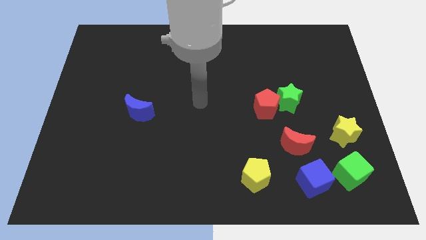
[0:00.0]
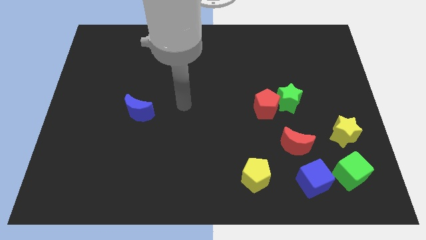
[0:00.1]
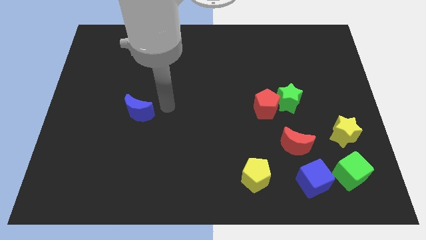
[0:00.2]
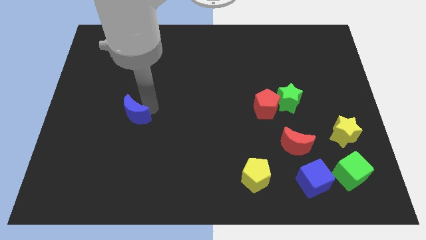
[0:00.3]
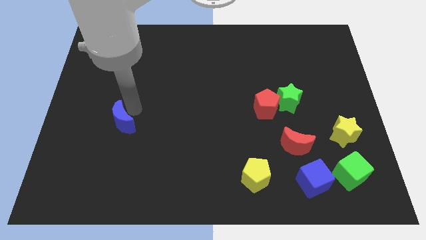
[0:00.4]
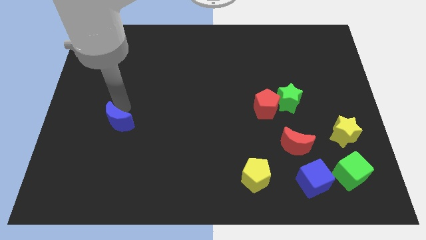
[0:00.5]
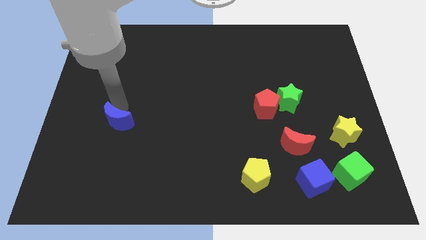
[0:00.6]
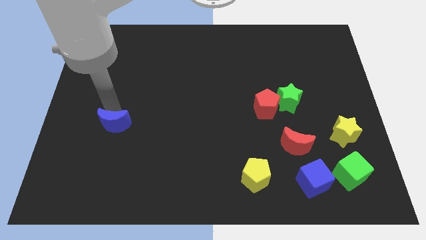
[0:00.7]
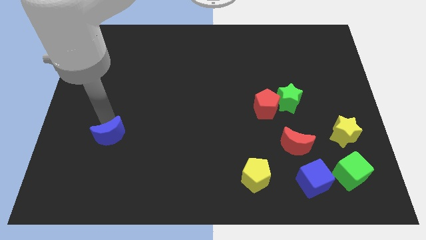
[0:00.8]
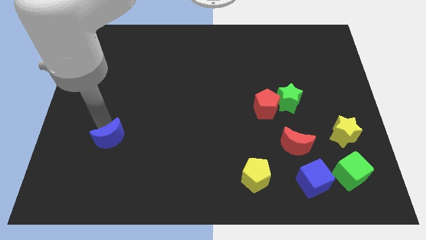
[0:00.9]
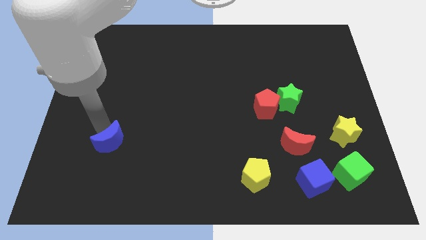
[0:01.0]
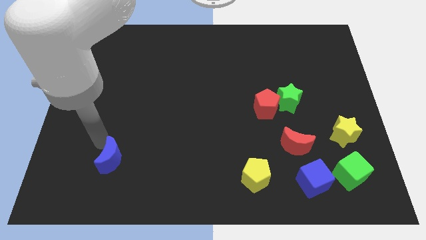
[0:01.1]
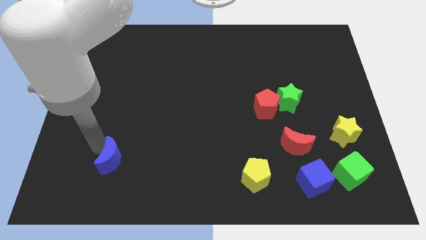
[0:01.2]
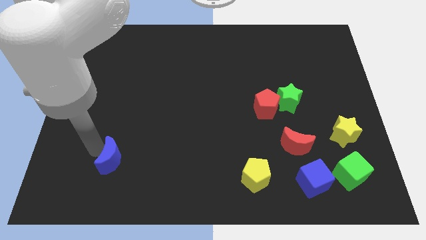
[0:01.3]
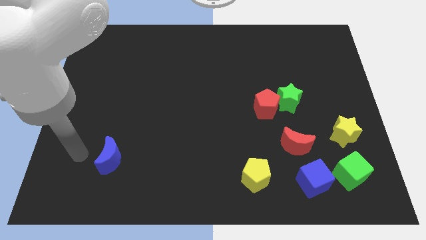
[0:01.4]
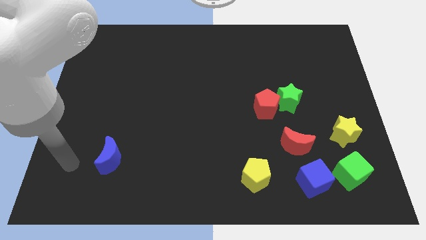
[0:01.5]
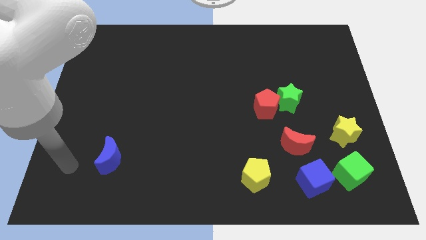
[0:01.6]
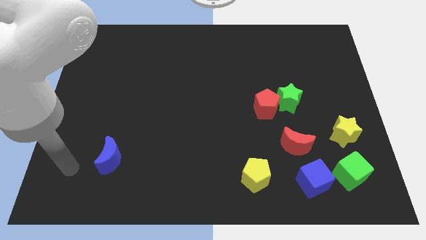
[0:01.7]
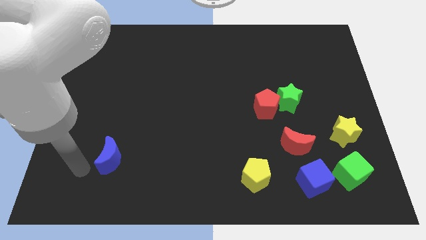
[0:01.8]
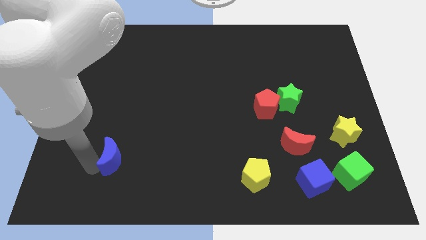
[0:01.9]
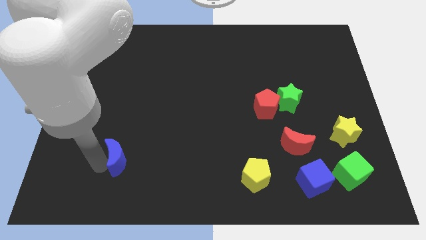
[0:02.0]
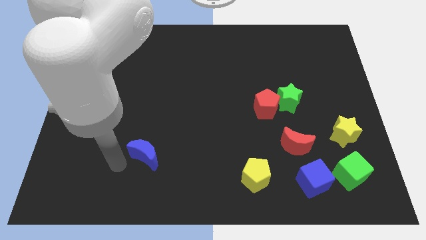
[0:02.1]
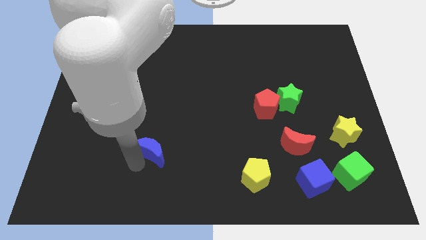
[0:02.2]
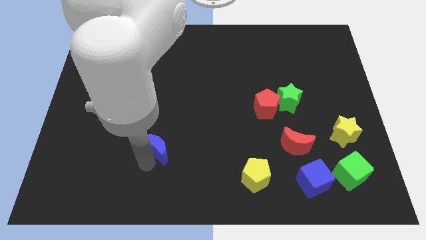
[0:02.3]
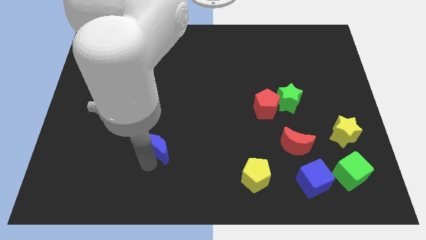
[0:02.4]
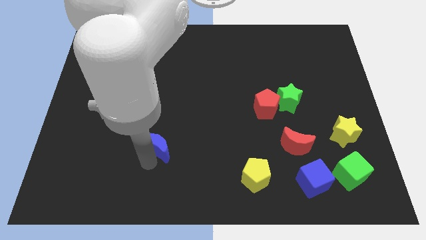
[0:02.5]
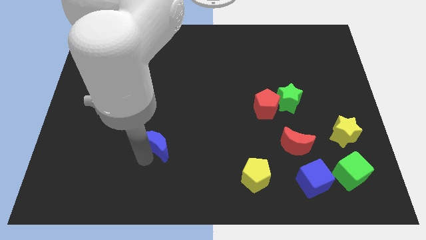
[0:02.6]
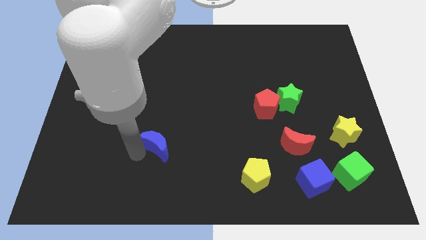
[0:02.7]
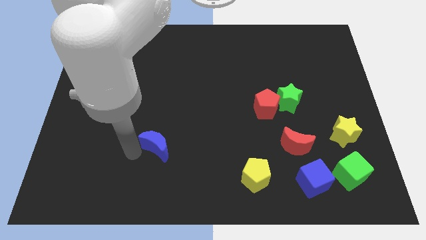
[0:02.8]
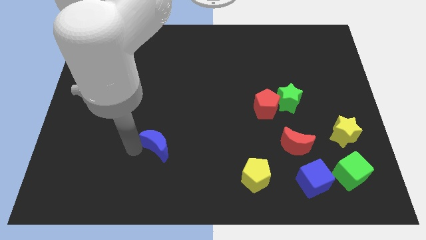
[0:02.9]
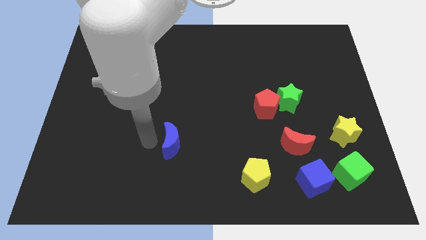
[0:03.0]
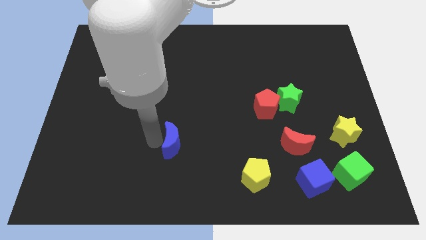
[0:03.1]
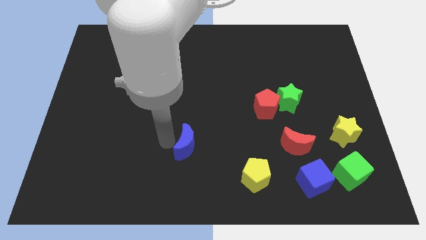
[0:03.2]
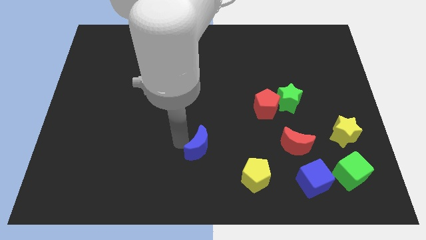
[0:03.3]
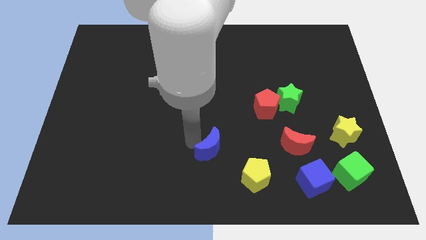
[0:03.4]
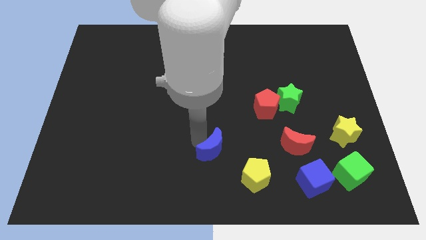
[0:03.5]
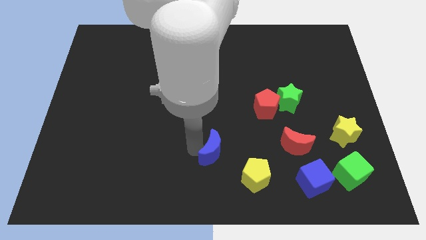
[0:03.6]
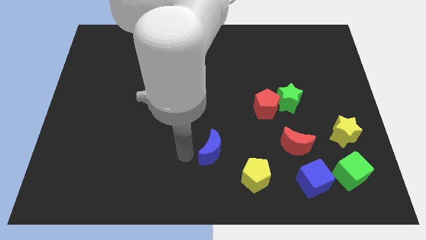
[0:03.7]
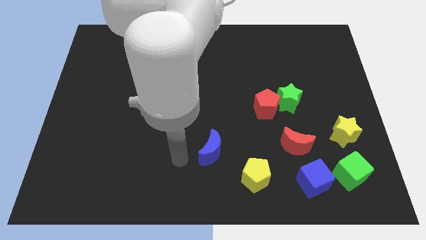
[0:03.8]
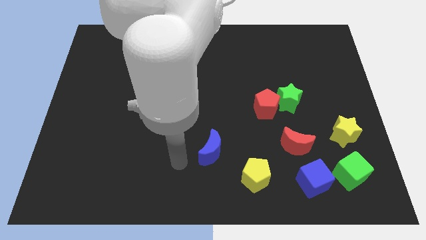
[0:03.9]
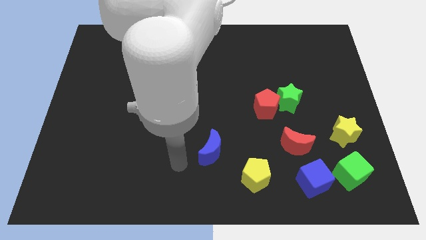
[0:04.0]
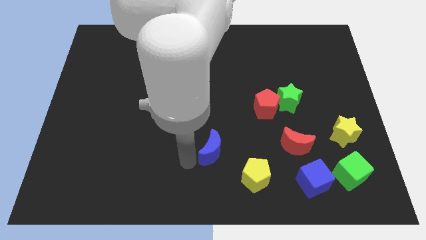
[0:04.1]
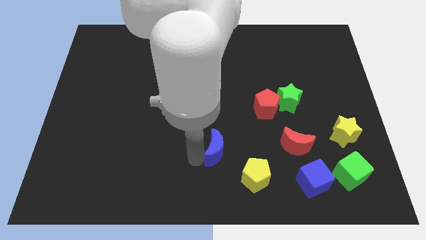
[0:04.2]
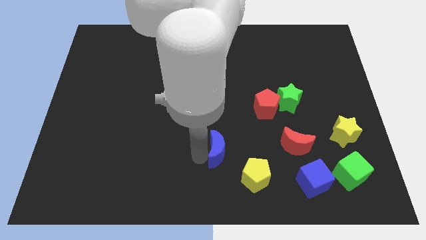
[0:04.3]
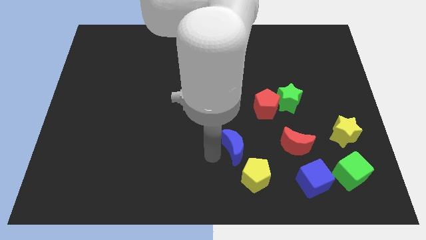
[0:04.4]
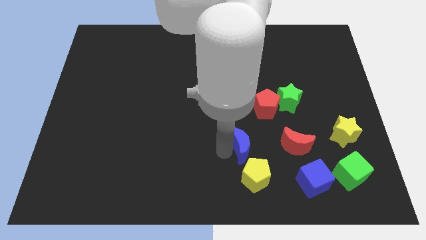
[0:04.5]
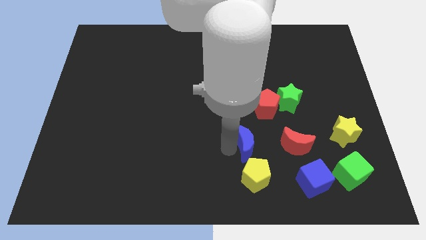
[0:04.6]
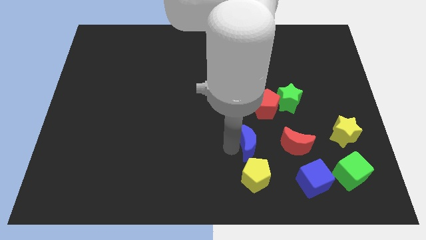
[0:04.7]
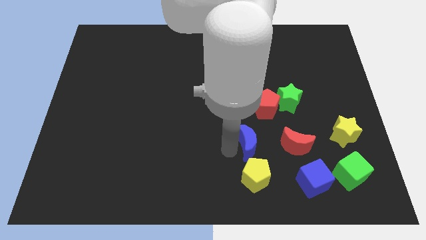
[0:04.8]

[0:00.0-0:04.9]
place the blue moon to the left of the red moon

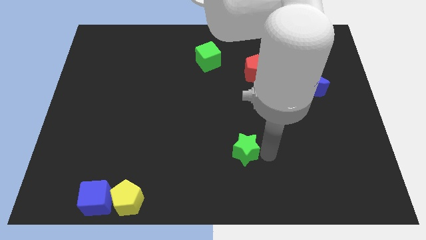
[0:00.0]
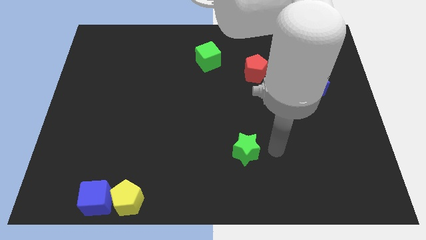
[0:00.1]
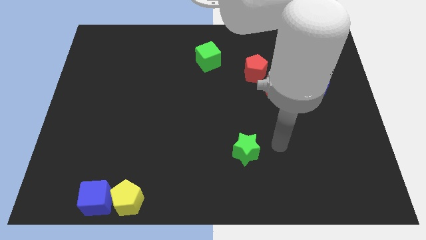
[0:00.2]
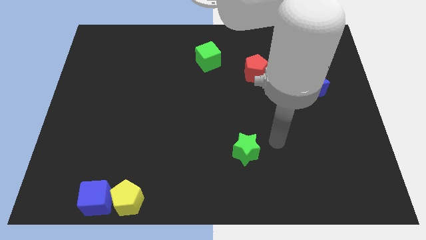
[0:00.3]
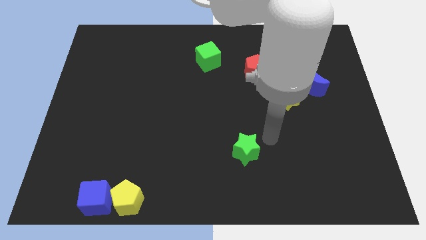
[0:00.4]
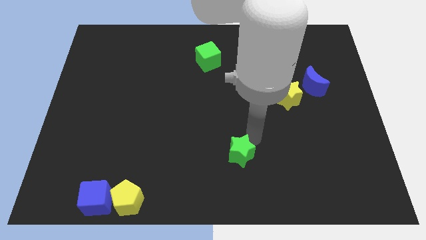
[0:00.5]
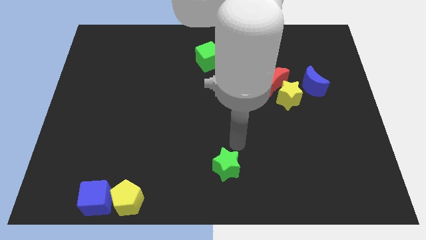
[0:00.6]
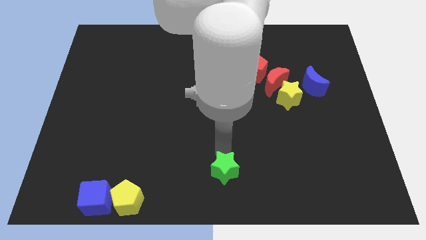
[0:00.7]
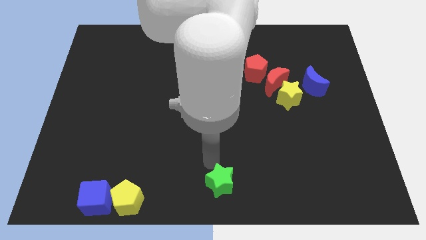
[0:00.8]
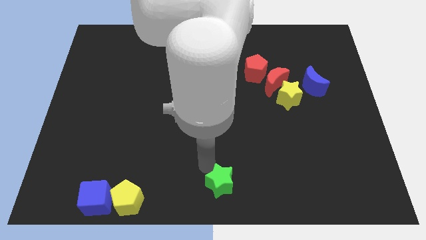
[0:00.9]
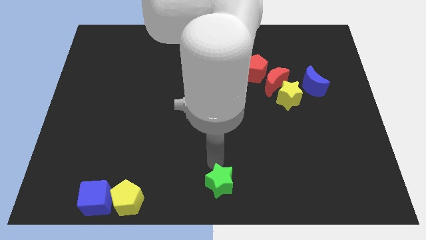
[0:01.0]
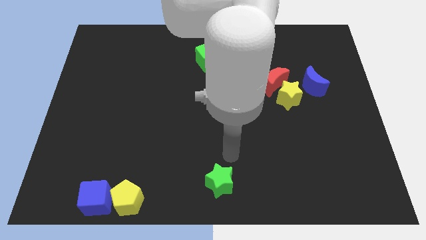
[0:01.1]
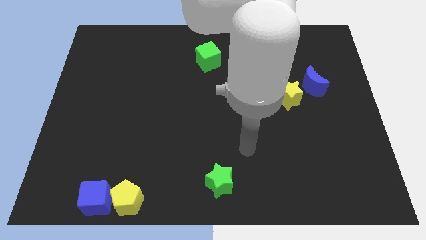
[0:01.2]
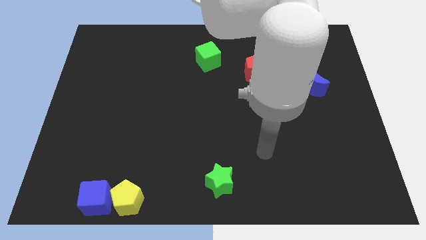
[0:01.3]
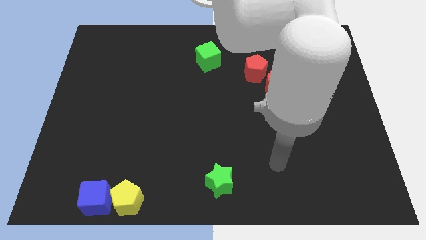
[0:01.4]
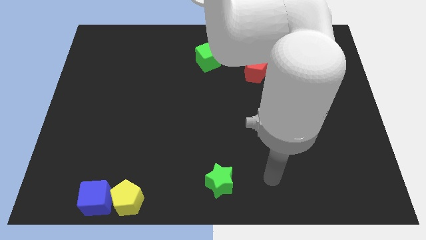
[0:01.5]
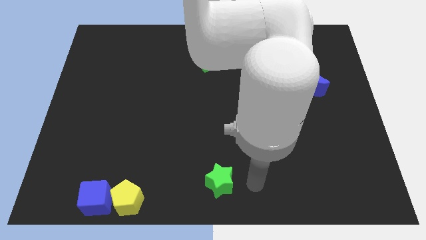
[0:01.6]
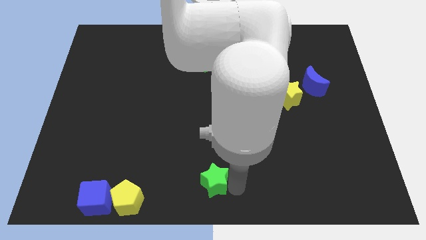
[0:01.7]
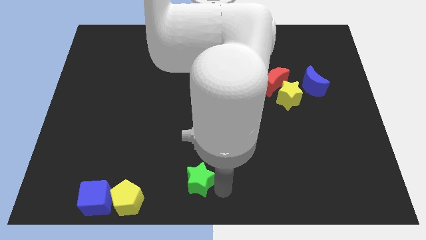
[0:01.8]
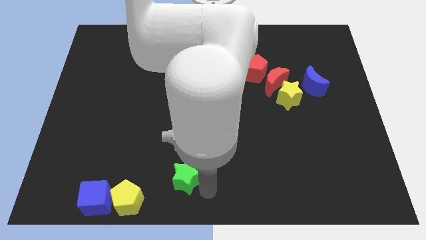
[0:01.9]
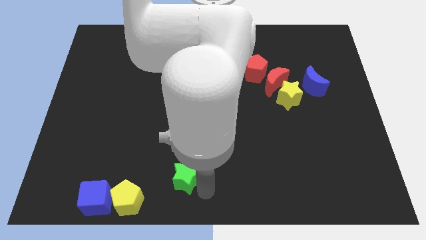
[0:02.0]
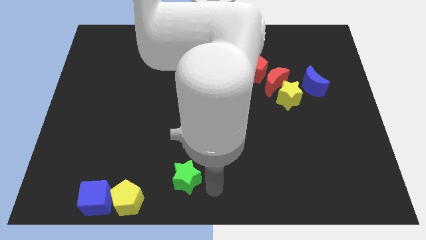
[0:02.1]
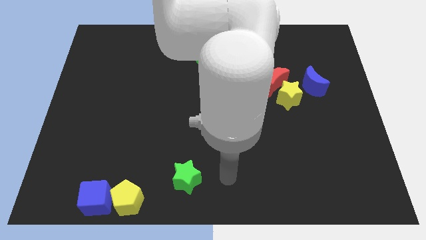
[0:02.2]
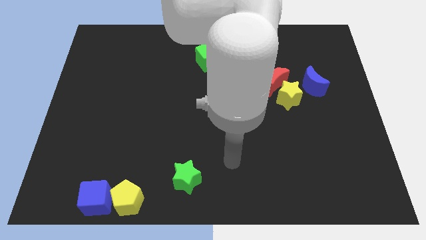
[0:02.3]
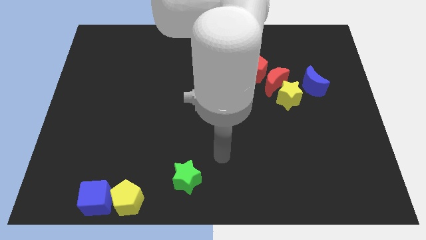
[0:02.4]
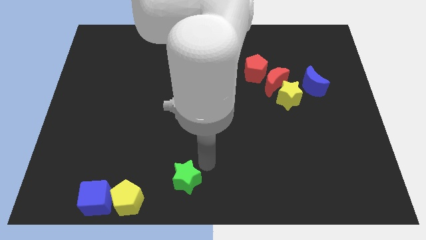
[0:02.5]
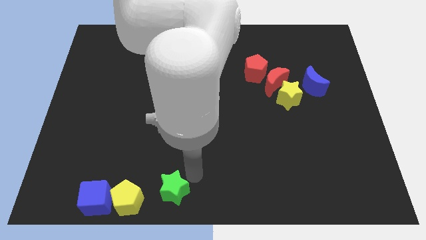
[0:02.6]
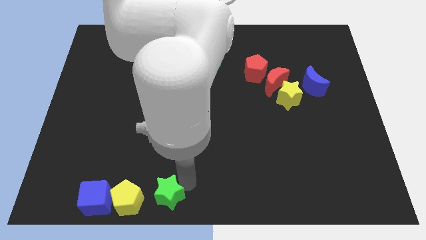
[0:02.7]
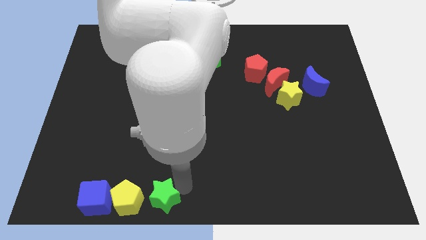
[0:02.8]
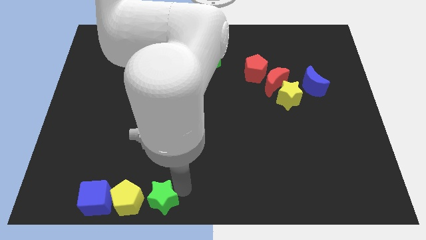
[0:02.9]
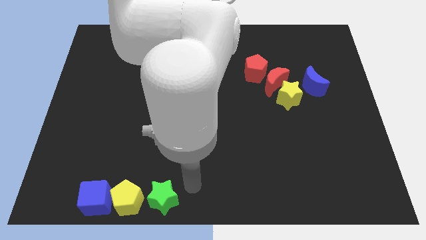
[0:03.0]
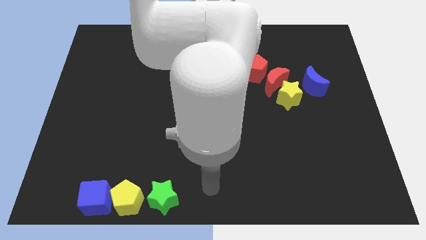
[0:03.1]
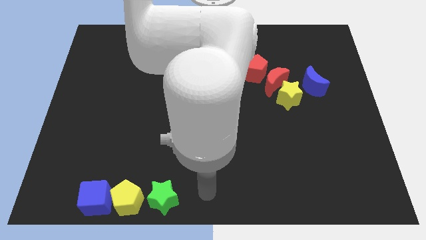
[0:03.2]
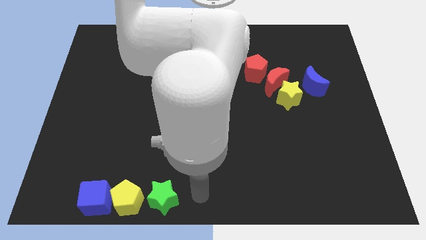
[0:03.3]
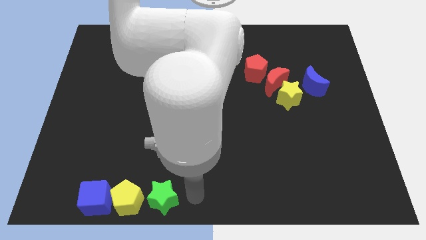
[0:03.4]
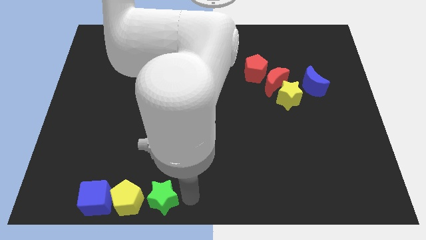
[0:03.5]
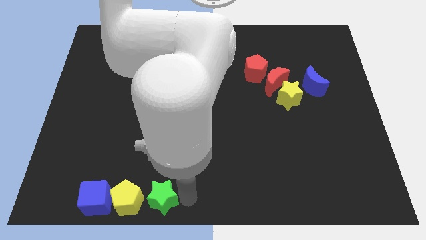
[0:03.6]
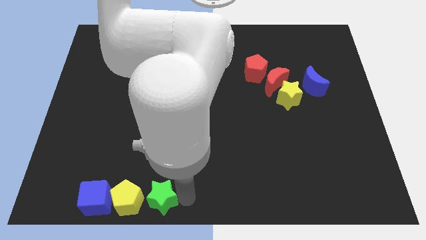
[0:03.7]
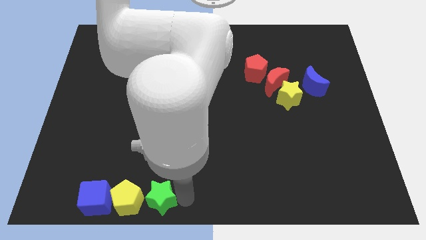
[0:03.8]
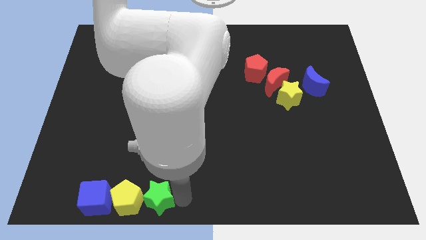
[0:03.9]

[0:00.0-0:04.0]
slide green star to the right of the yellow pentagon
